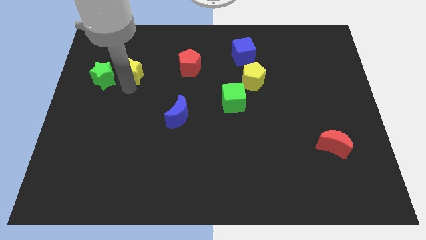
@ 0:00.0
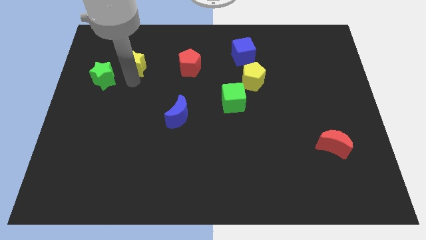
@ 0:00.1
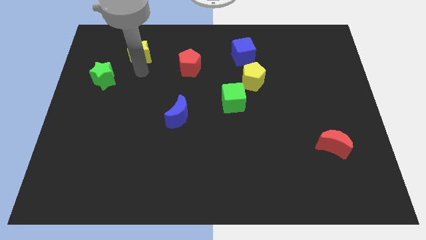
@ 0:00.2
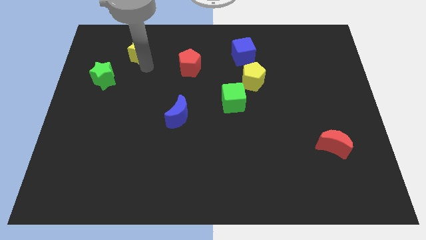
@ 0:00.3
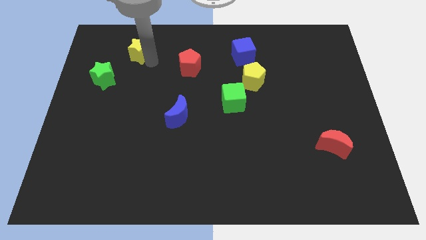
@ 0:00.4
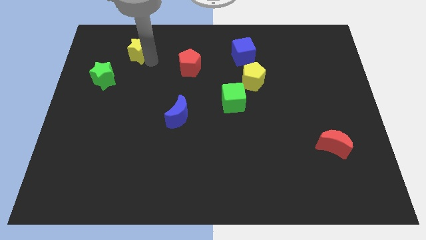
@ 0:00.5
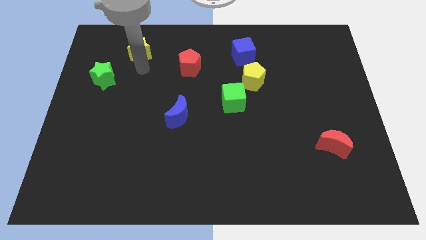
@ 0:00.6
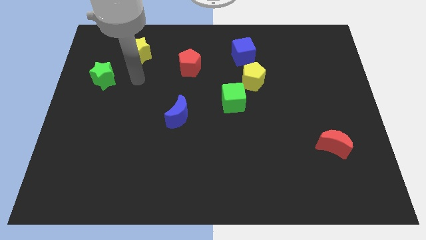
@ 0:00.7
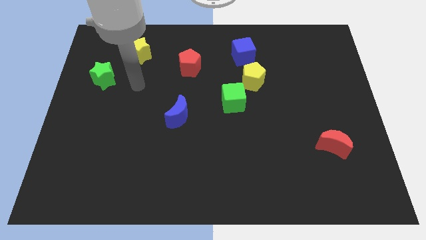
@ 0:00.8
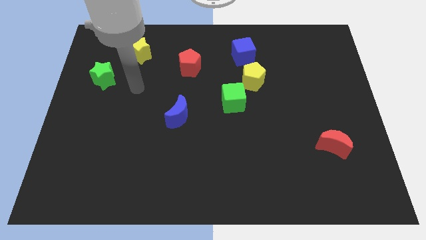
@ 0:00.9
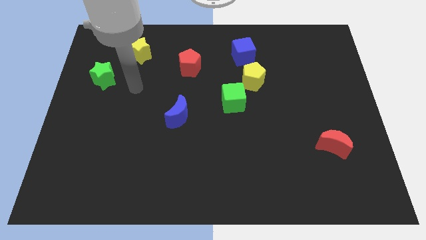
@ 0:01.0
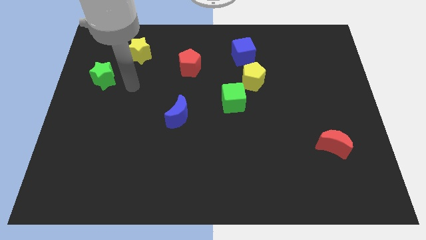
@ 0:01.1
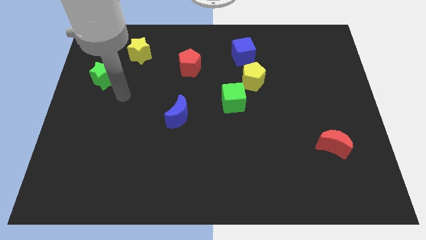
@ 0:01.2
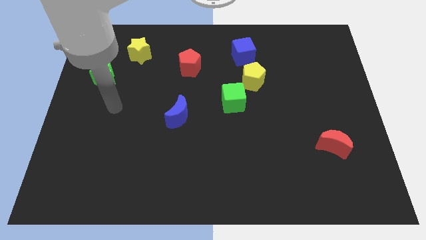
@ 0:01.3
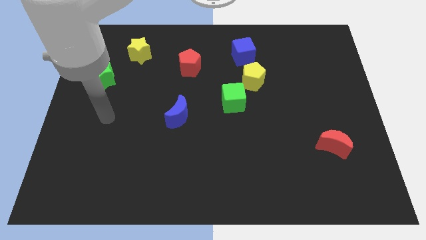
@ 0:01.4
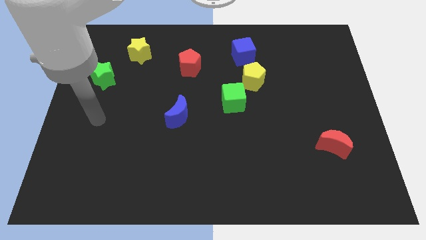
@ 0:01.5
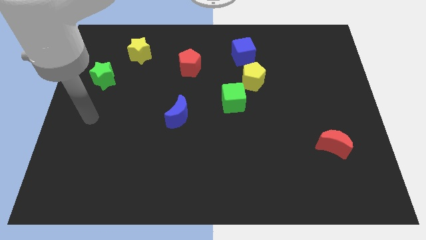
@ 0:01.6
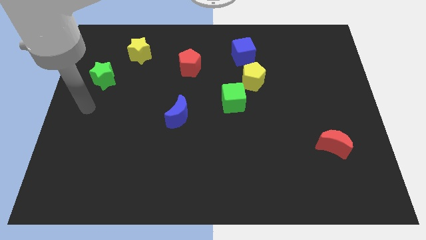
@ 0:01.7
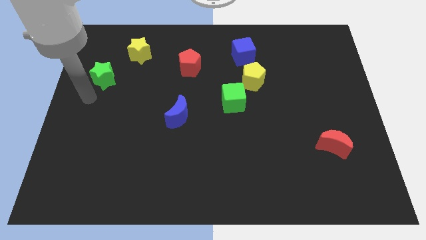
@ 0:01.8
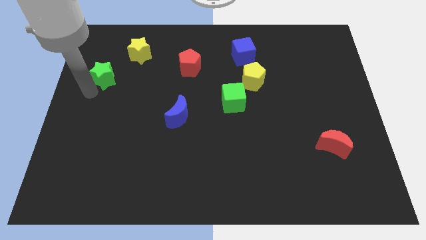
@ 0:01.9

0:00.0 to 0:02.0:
place the yellow star diagonally top right to the green star

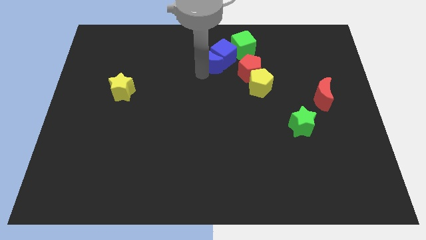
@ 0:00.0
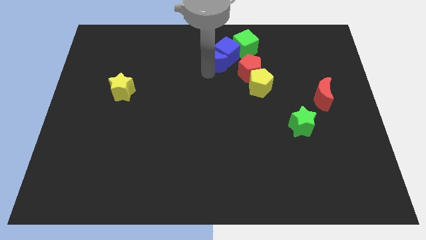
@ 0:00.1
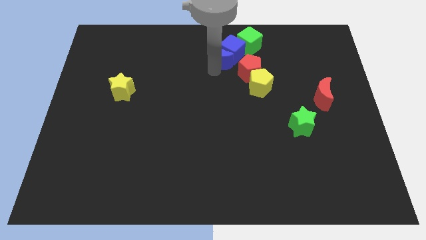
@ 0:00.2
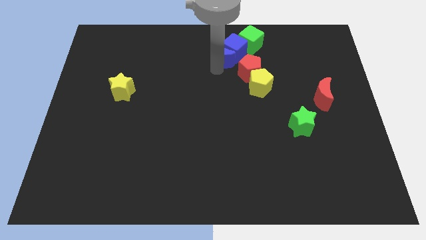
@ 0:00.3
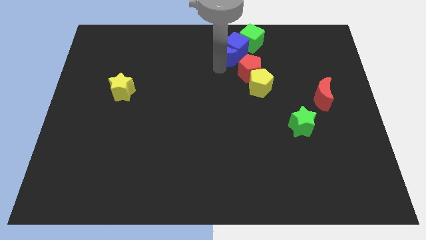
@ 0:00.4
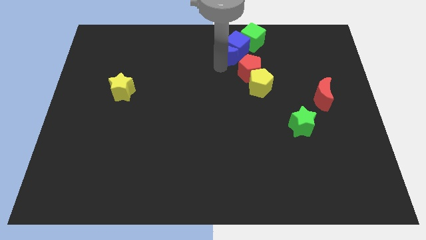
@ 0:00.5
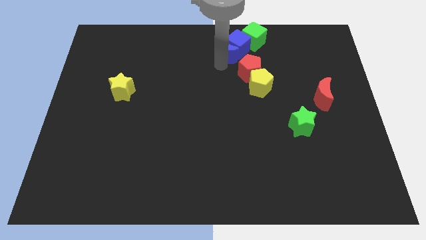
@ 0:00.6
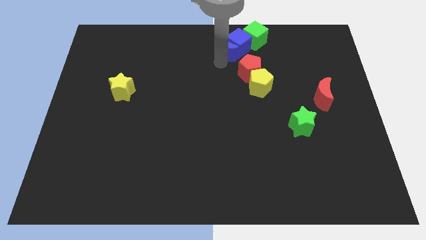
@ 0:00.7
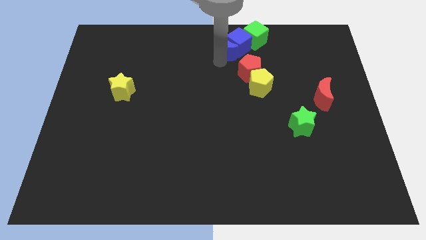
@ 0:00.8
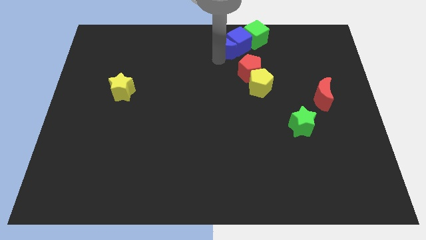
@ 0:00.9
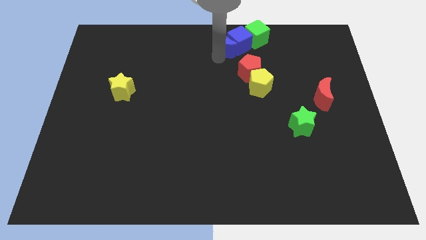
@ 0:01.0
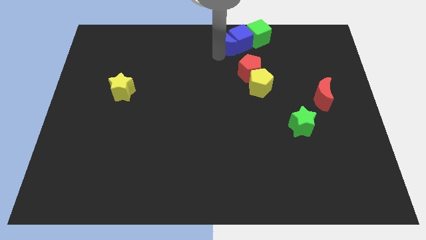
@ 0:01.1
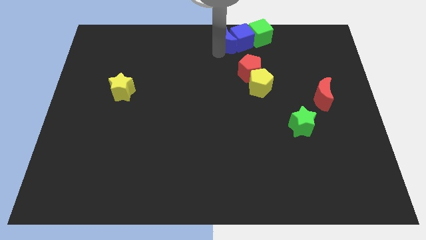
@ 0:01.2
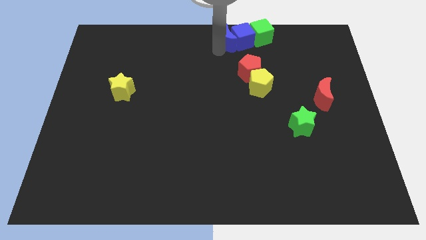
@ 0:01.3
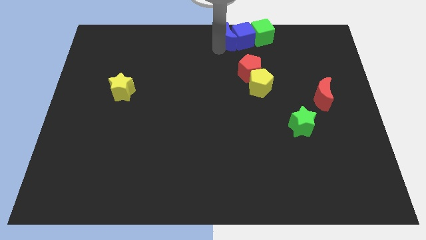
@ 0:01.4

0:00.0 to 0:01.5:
put the group of blue blocks and green cube at the top of the red pentagon

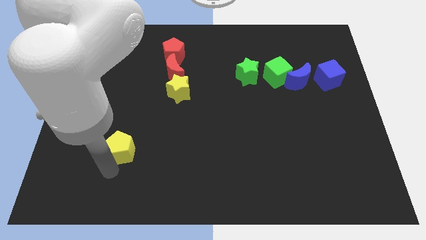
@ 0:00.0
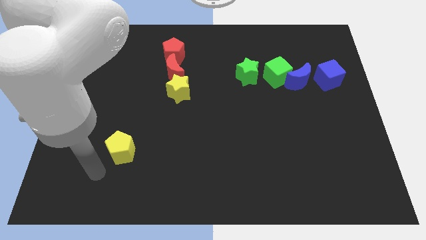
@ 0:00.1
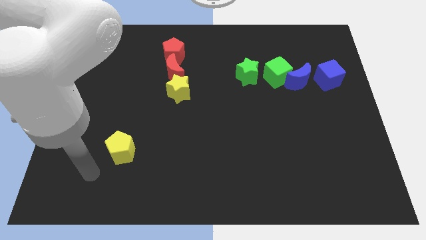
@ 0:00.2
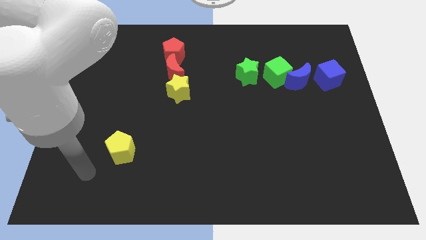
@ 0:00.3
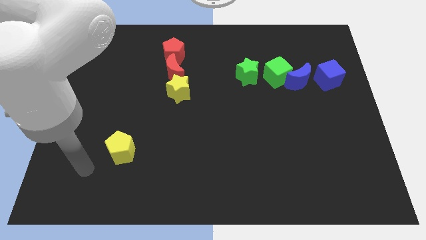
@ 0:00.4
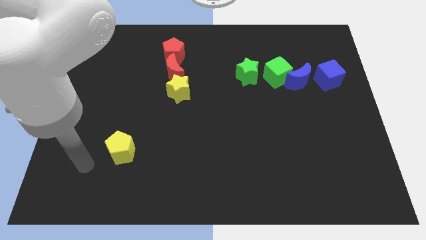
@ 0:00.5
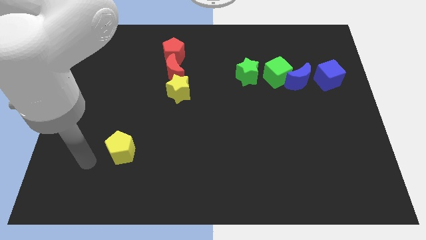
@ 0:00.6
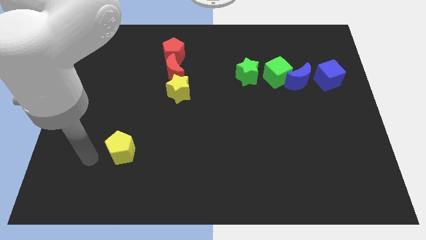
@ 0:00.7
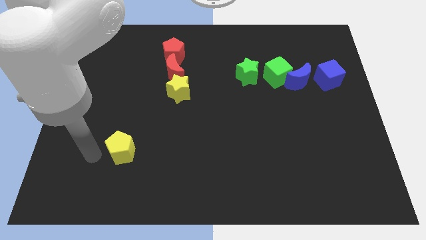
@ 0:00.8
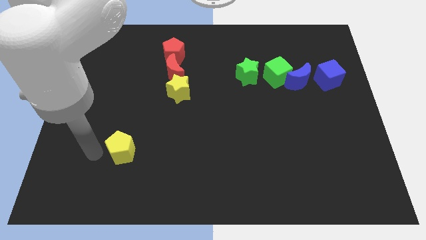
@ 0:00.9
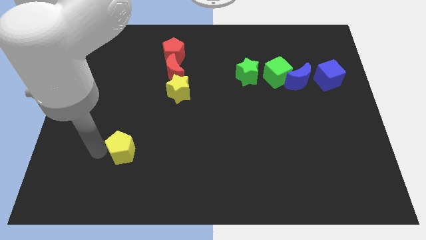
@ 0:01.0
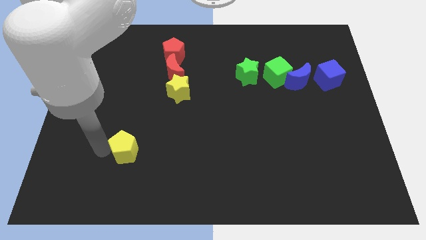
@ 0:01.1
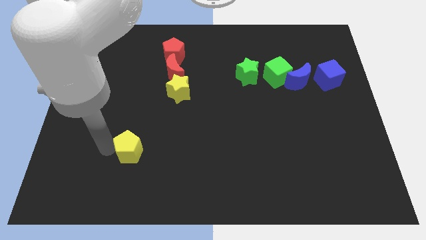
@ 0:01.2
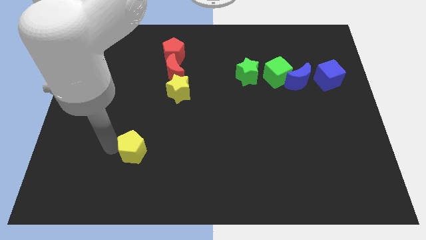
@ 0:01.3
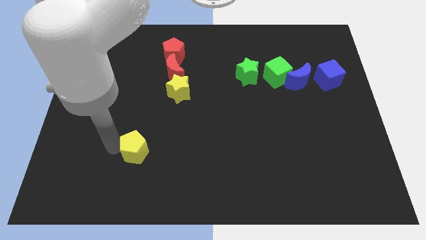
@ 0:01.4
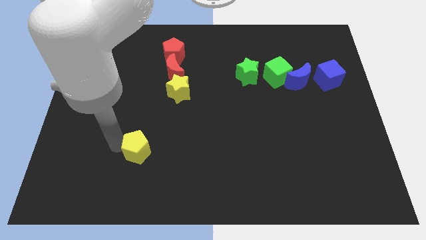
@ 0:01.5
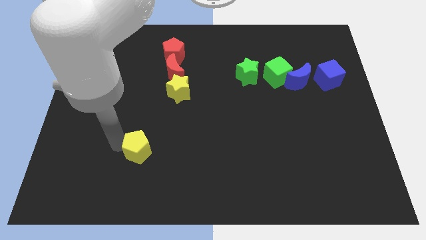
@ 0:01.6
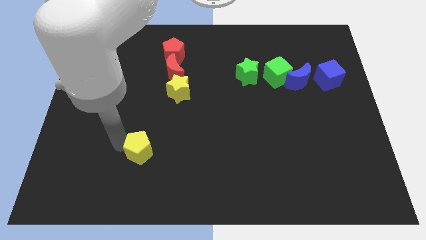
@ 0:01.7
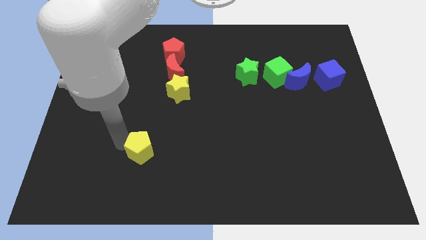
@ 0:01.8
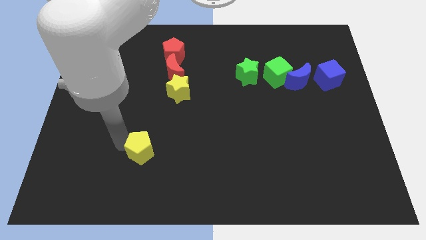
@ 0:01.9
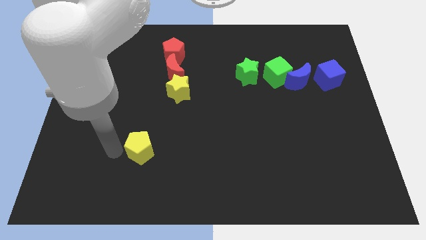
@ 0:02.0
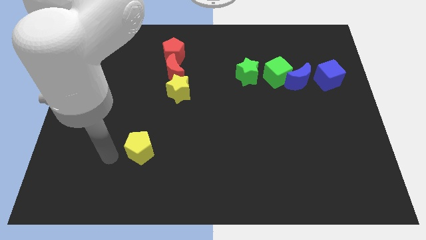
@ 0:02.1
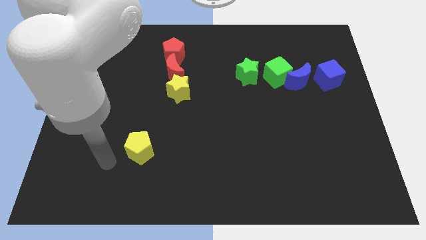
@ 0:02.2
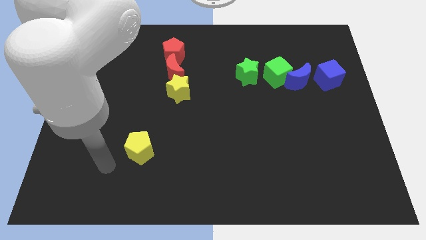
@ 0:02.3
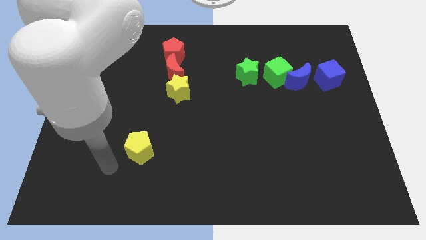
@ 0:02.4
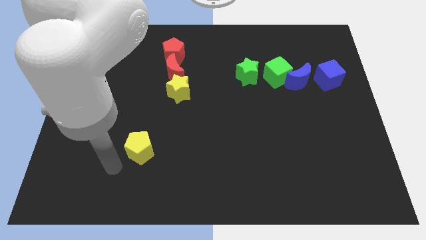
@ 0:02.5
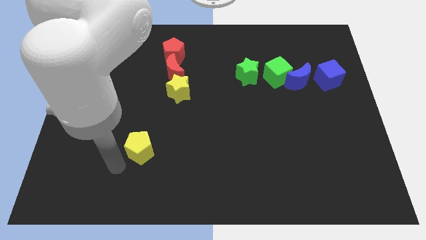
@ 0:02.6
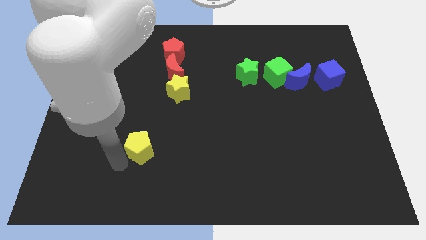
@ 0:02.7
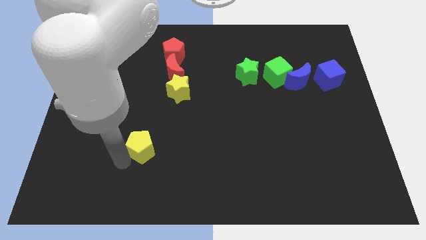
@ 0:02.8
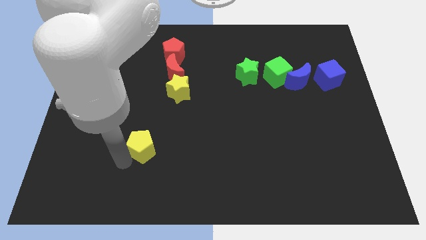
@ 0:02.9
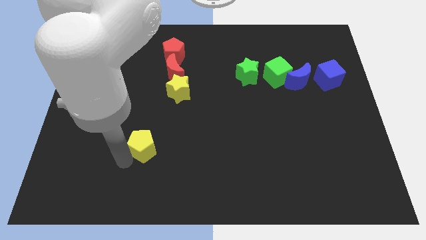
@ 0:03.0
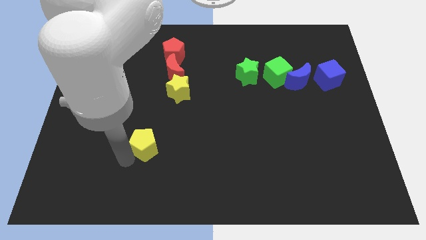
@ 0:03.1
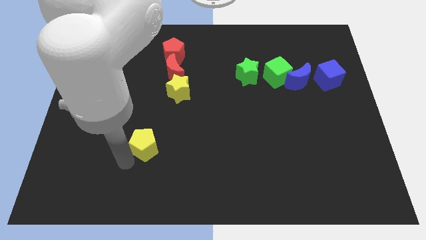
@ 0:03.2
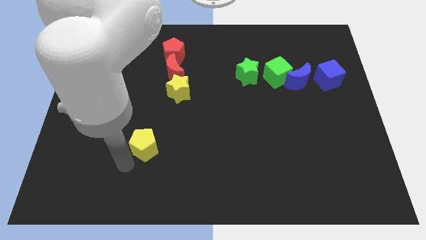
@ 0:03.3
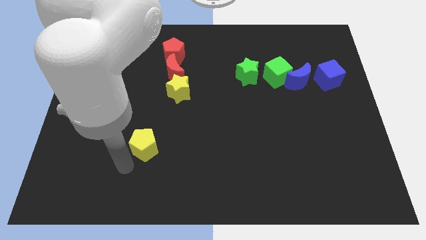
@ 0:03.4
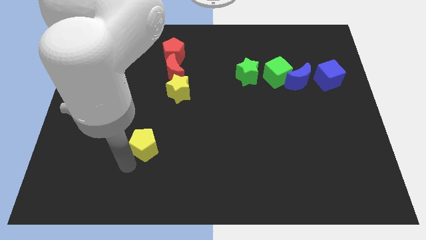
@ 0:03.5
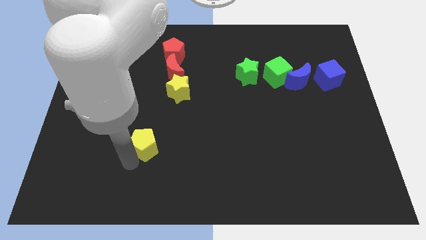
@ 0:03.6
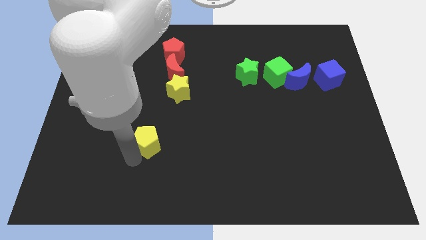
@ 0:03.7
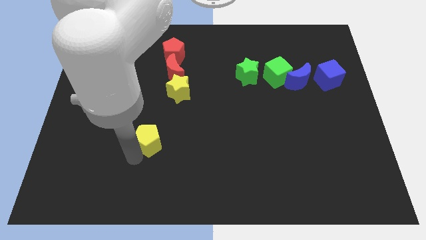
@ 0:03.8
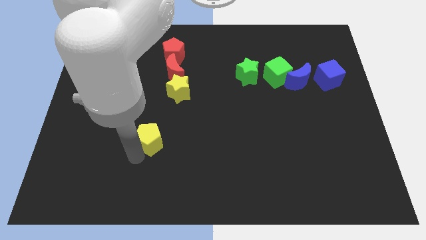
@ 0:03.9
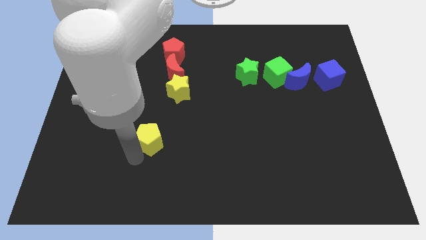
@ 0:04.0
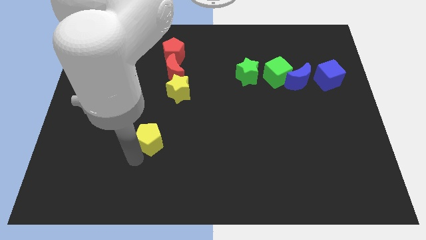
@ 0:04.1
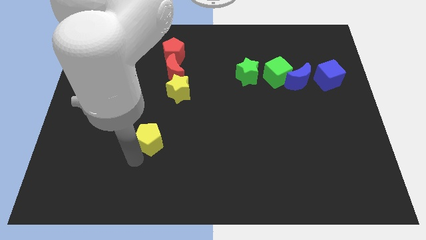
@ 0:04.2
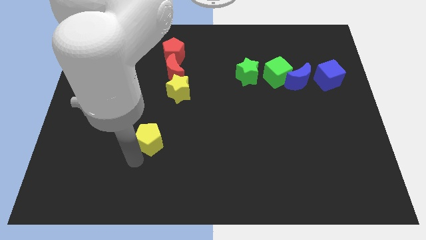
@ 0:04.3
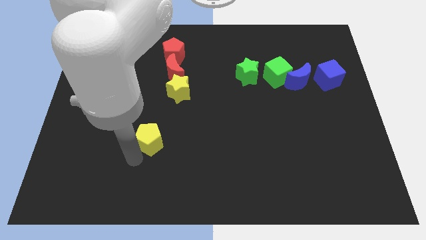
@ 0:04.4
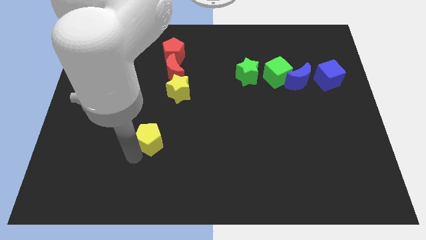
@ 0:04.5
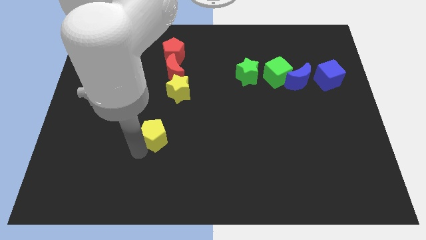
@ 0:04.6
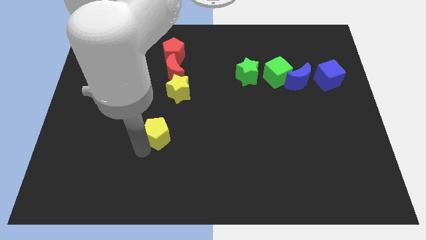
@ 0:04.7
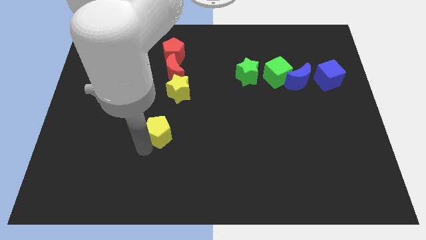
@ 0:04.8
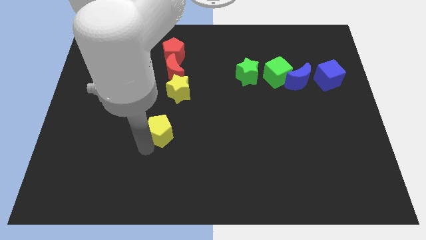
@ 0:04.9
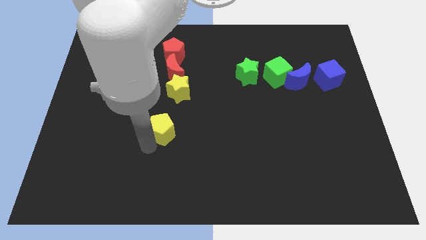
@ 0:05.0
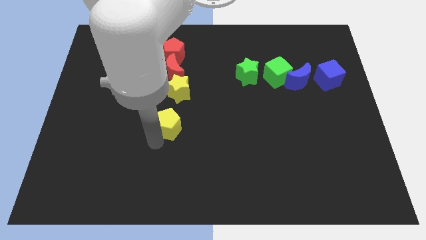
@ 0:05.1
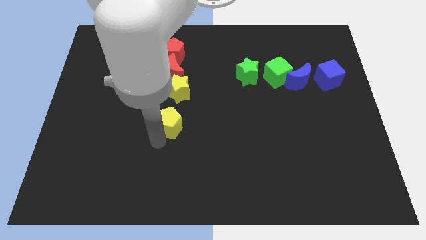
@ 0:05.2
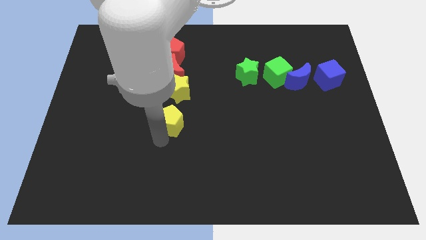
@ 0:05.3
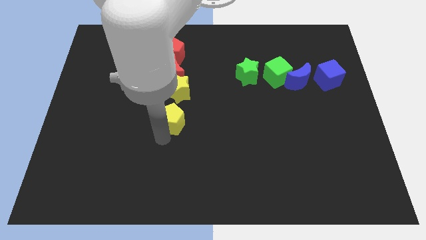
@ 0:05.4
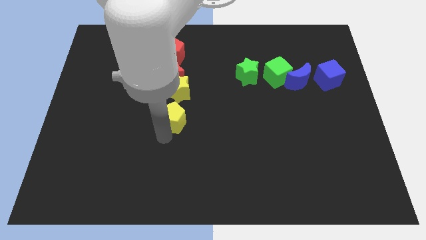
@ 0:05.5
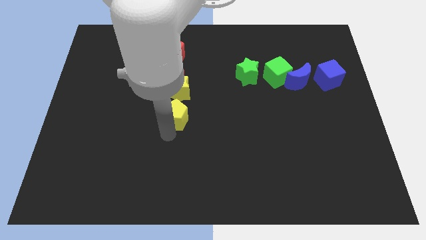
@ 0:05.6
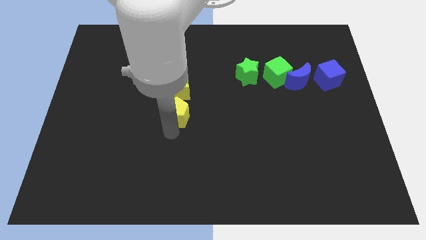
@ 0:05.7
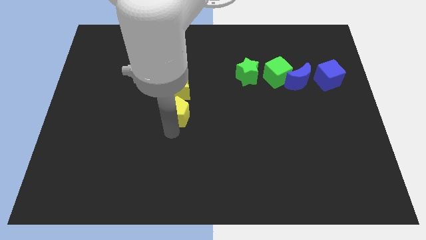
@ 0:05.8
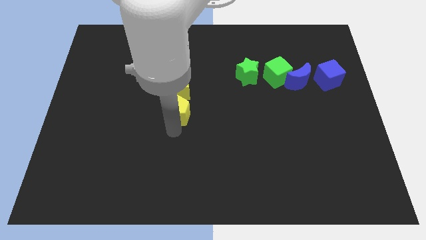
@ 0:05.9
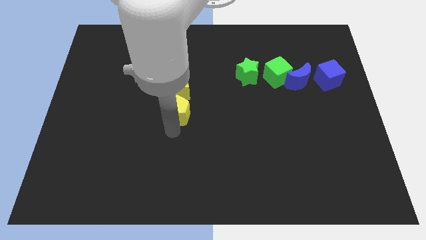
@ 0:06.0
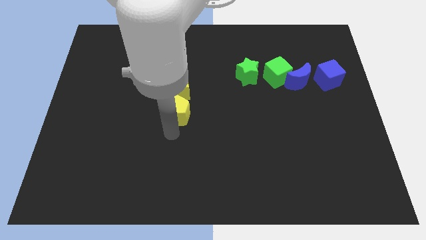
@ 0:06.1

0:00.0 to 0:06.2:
push the yellow pentagon down to the bottom of the yellow star
